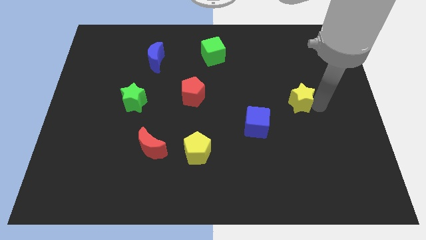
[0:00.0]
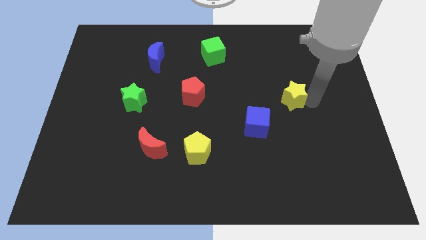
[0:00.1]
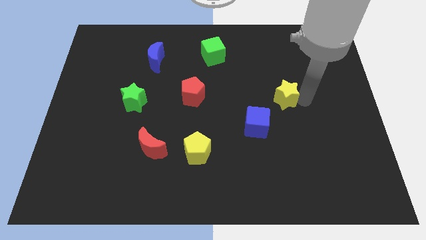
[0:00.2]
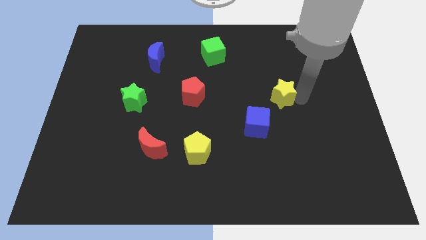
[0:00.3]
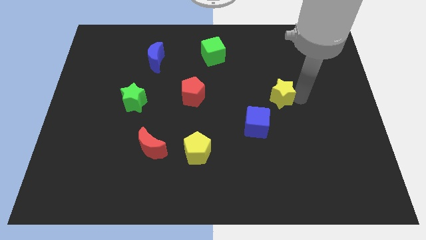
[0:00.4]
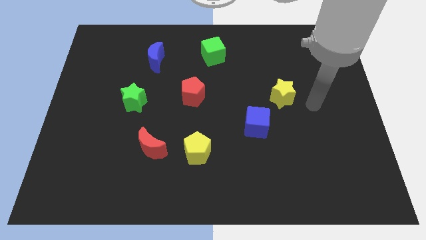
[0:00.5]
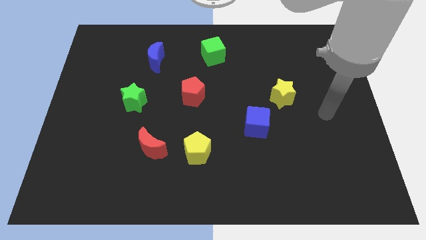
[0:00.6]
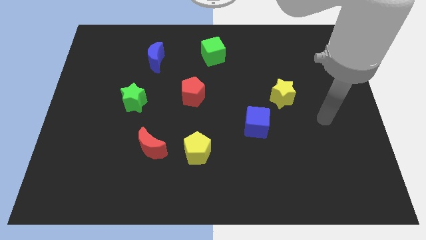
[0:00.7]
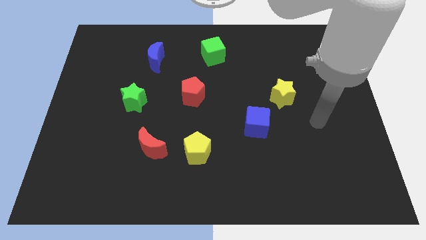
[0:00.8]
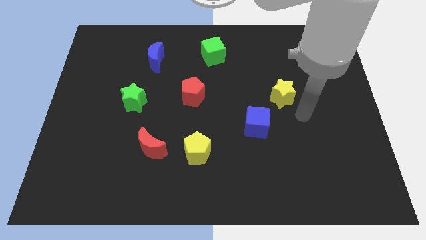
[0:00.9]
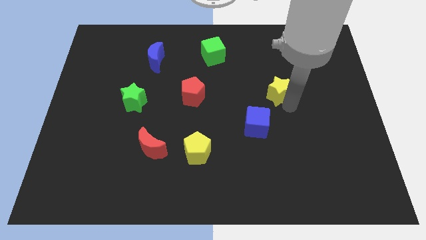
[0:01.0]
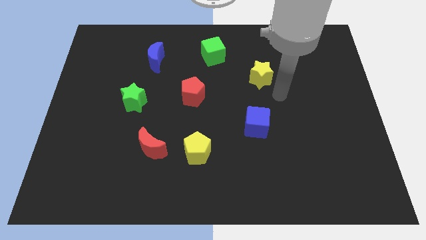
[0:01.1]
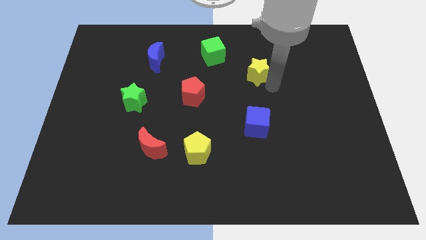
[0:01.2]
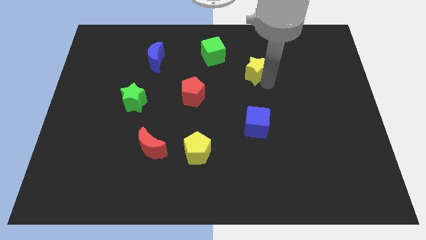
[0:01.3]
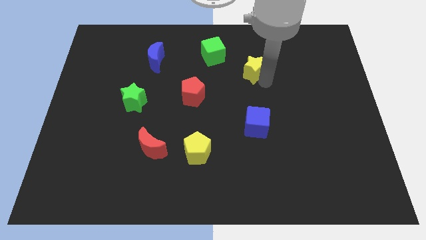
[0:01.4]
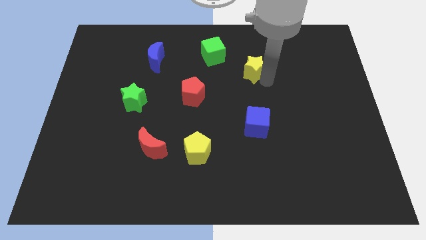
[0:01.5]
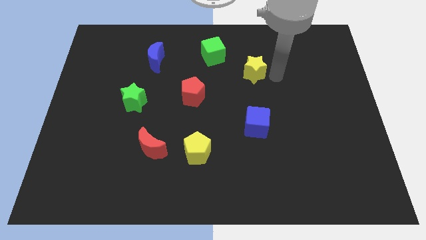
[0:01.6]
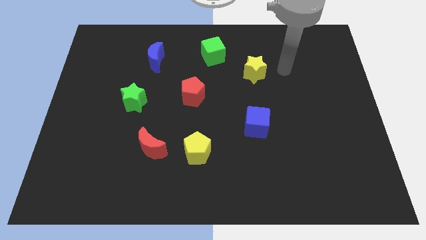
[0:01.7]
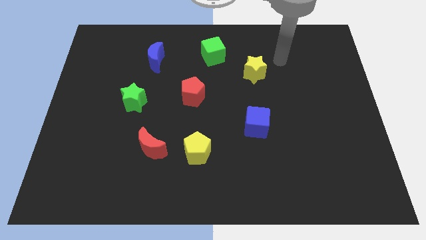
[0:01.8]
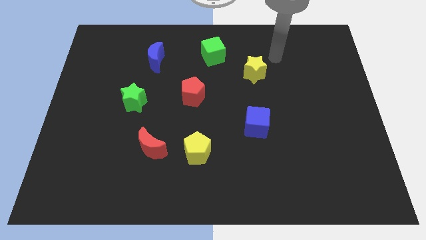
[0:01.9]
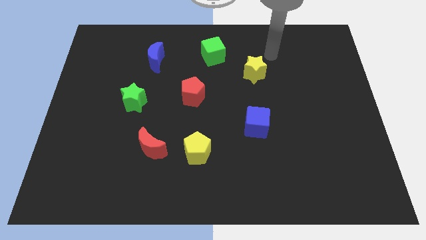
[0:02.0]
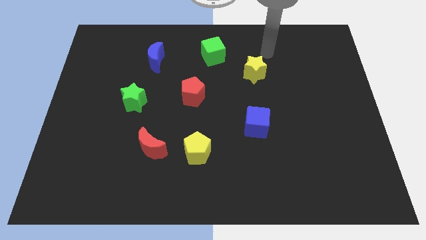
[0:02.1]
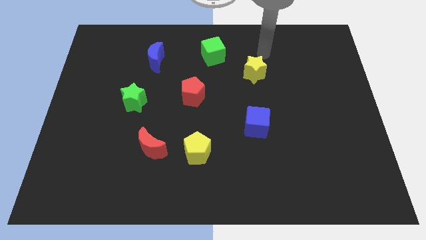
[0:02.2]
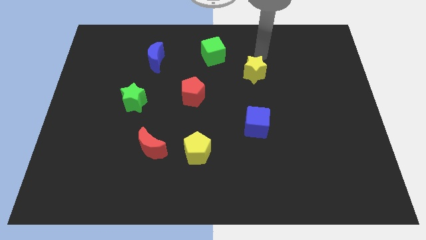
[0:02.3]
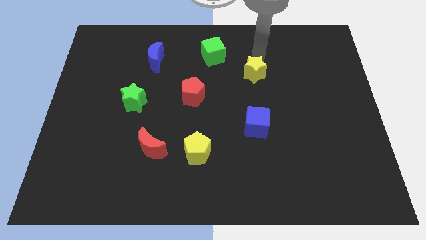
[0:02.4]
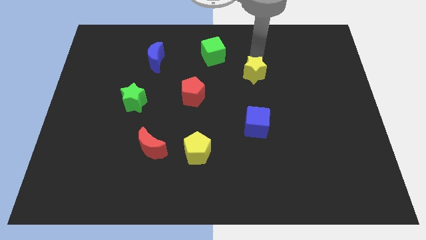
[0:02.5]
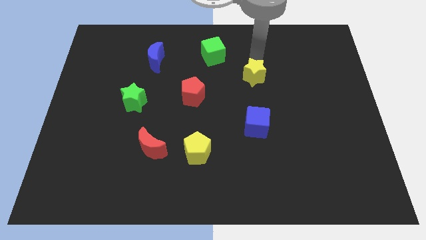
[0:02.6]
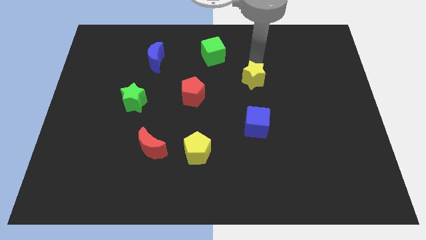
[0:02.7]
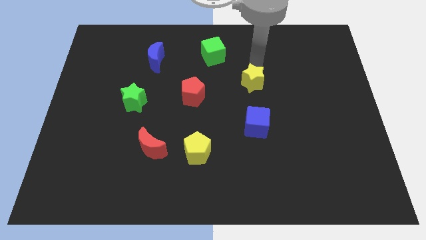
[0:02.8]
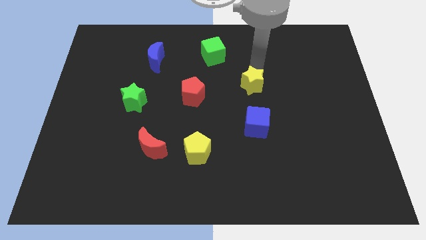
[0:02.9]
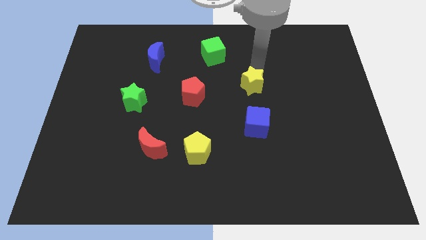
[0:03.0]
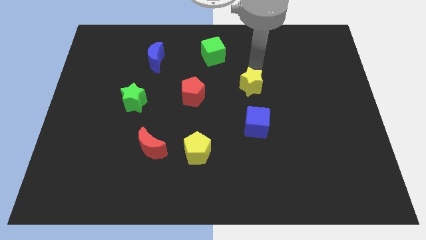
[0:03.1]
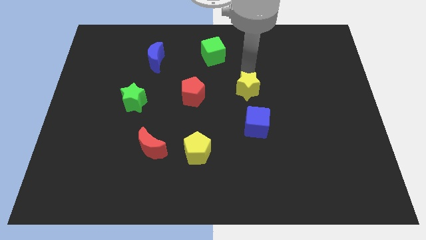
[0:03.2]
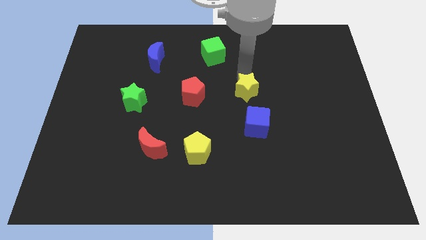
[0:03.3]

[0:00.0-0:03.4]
place the yellow star on the top left side of the blue cube

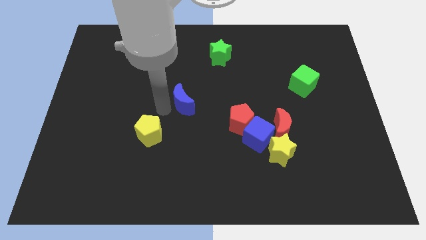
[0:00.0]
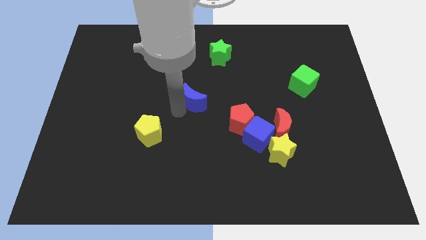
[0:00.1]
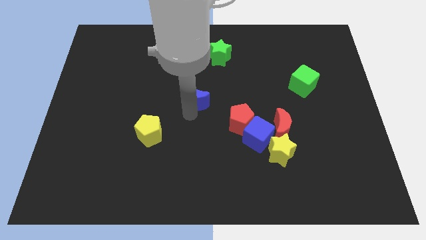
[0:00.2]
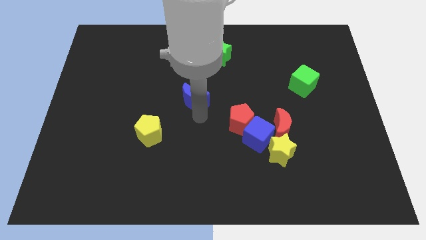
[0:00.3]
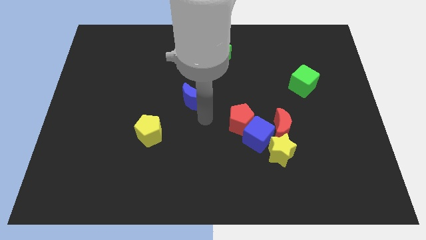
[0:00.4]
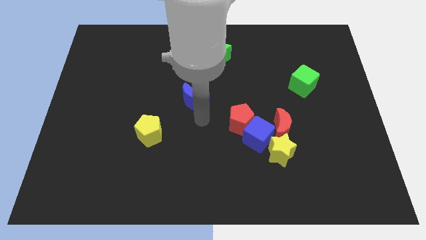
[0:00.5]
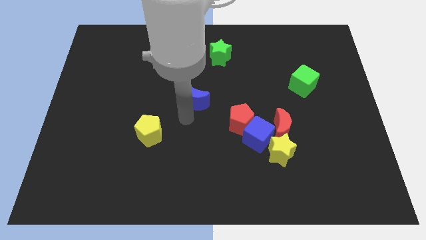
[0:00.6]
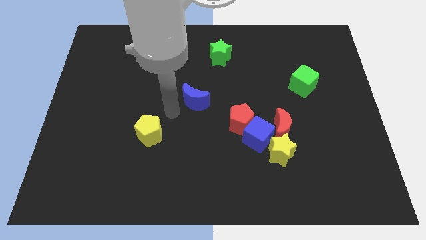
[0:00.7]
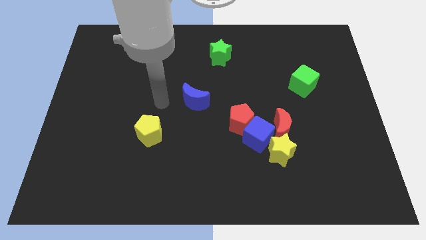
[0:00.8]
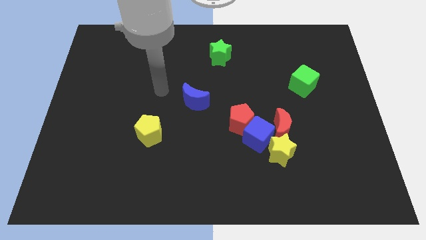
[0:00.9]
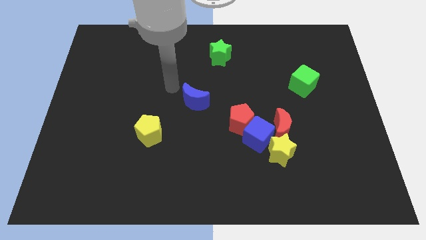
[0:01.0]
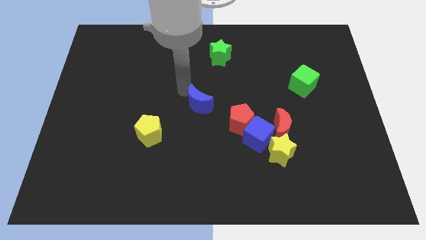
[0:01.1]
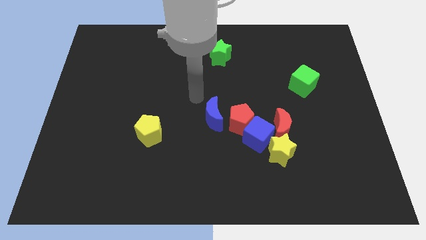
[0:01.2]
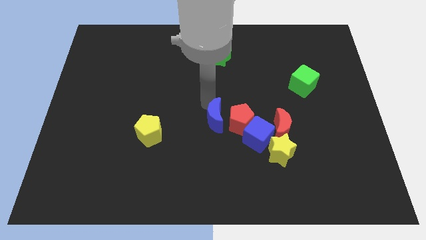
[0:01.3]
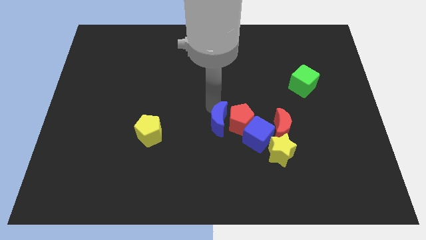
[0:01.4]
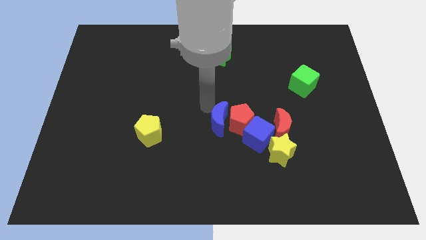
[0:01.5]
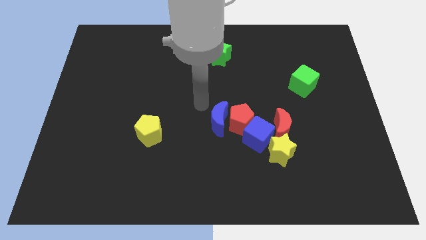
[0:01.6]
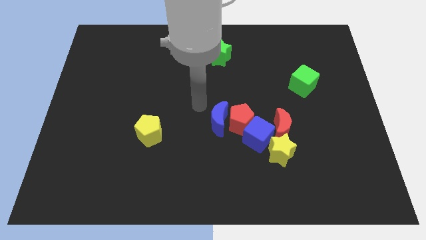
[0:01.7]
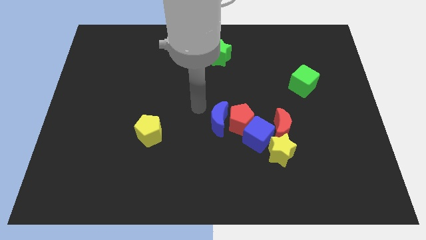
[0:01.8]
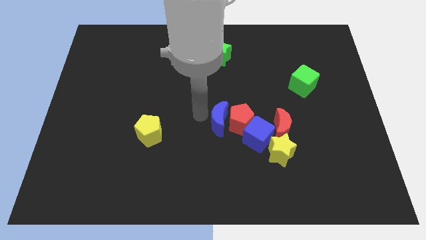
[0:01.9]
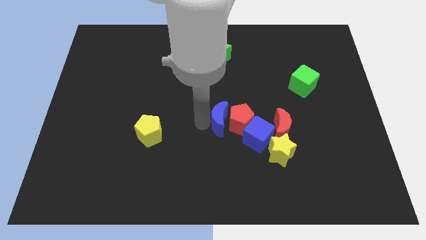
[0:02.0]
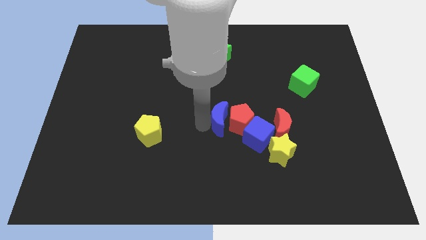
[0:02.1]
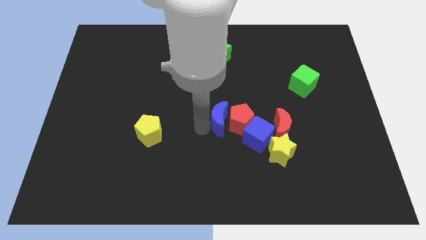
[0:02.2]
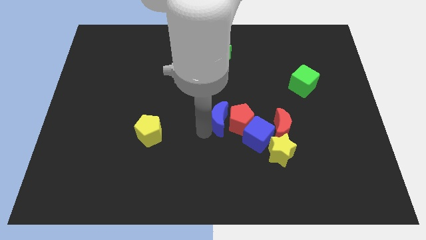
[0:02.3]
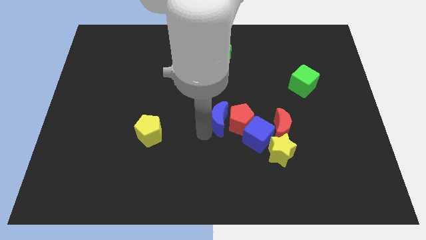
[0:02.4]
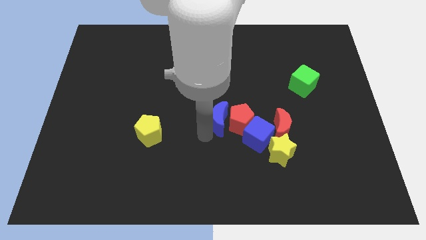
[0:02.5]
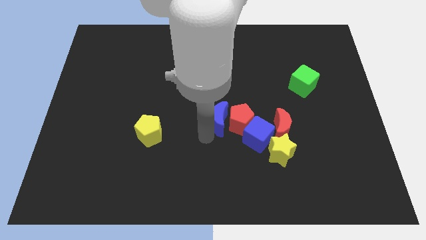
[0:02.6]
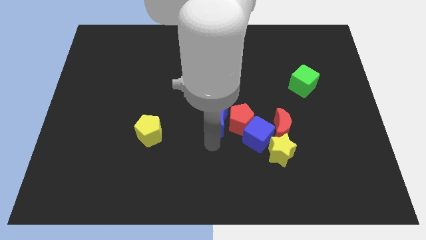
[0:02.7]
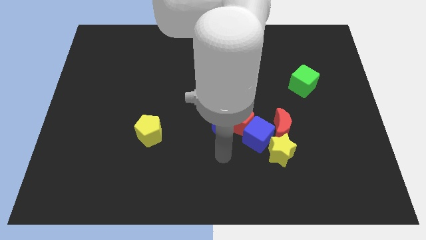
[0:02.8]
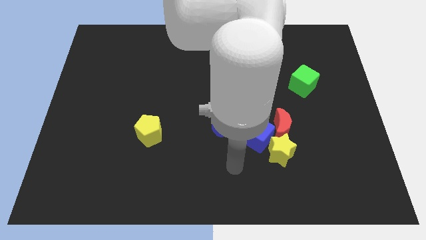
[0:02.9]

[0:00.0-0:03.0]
place blue moon parallel right to red pentagon

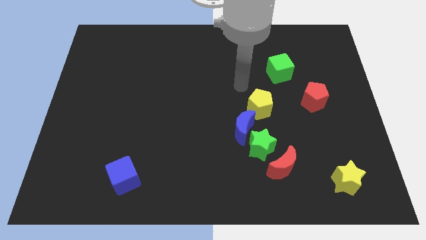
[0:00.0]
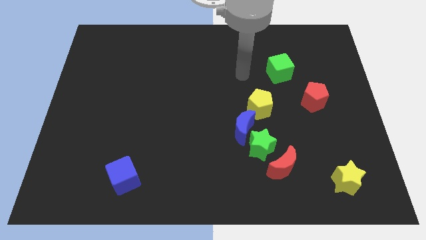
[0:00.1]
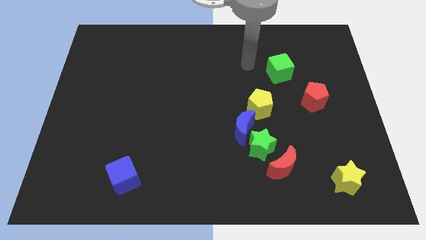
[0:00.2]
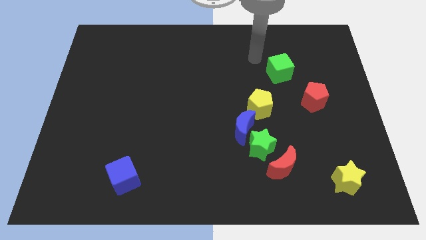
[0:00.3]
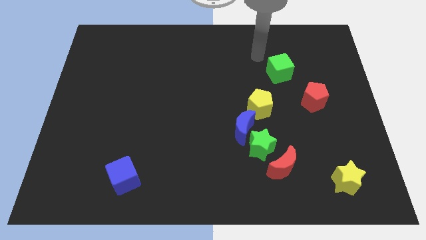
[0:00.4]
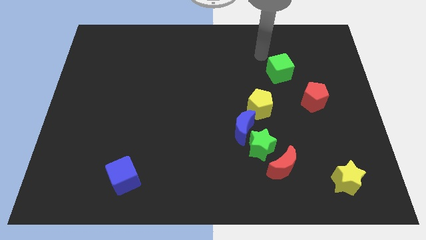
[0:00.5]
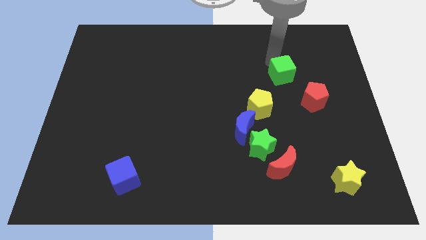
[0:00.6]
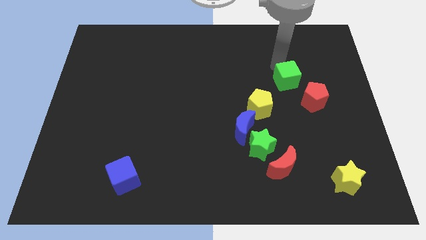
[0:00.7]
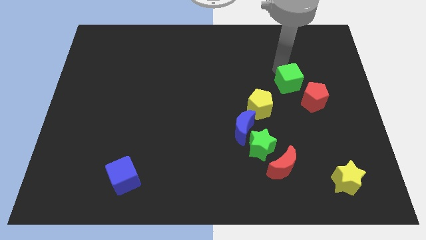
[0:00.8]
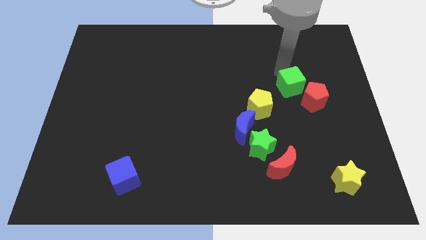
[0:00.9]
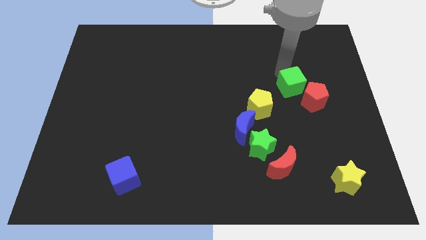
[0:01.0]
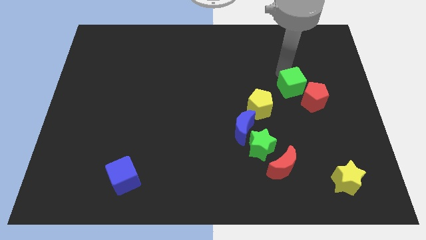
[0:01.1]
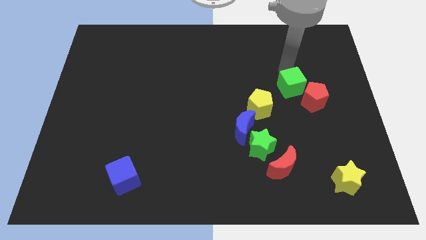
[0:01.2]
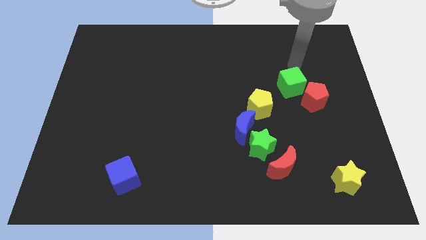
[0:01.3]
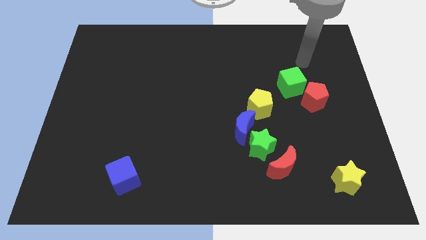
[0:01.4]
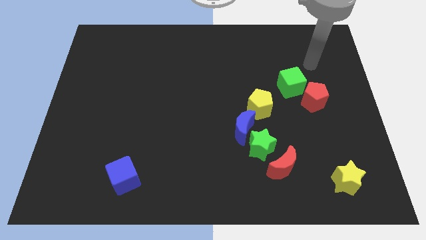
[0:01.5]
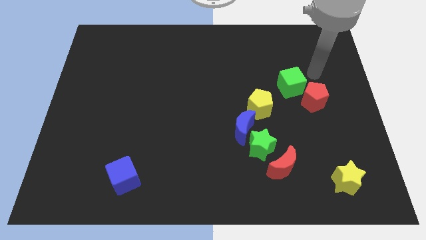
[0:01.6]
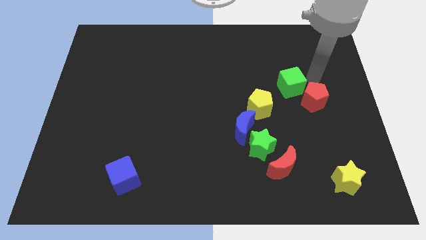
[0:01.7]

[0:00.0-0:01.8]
push the green cube left above into red pentagon

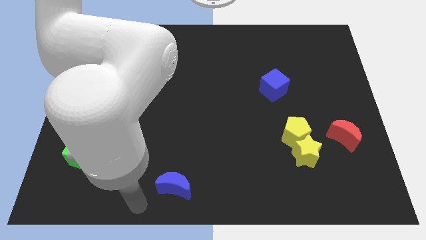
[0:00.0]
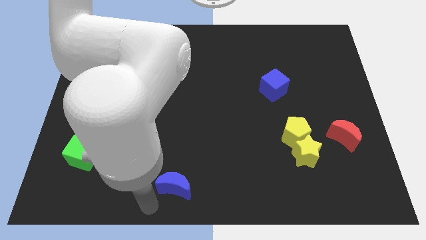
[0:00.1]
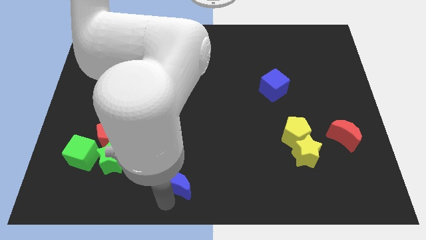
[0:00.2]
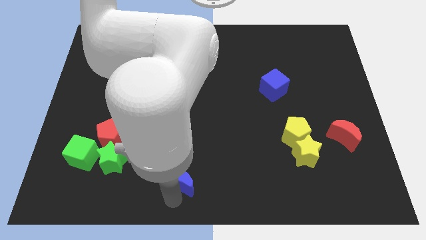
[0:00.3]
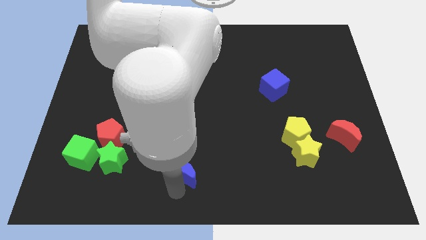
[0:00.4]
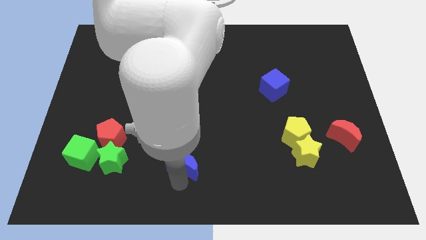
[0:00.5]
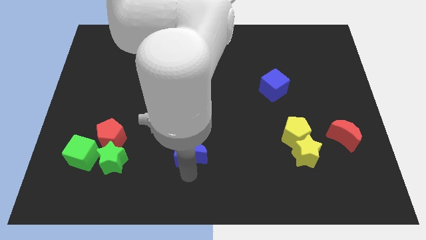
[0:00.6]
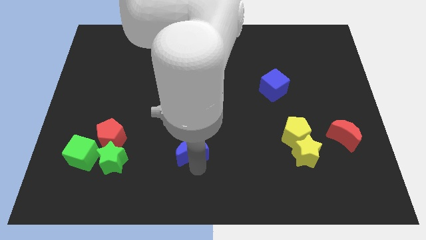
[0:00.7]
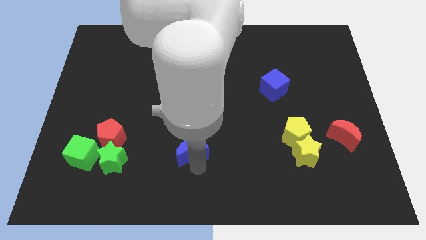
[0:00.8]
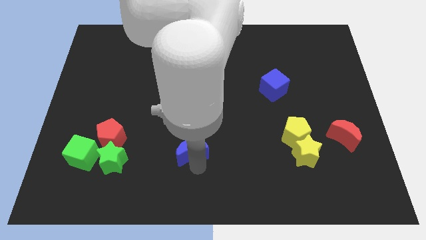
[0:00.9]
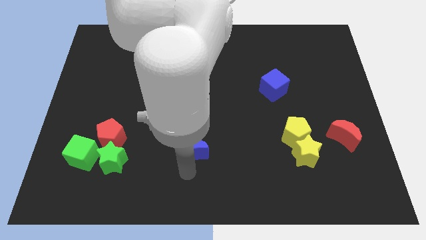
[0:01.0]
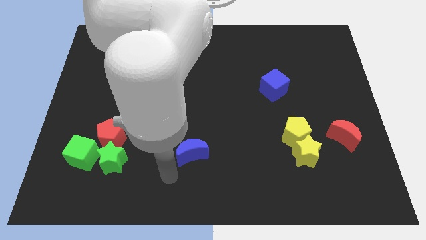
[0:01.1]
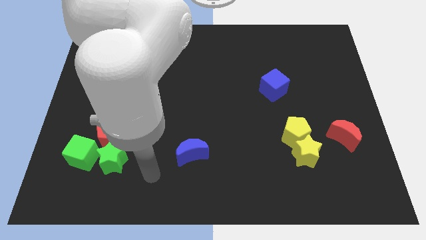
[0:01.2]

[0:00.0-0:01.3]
push the blue crescent to the left of yellow blocks
